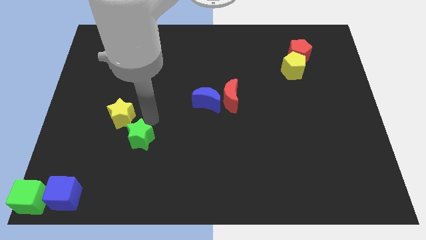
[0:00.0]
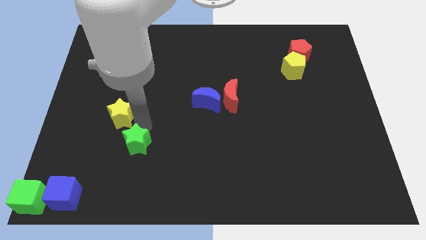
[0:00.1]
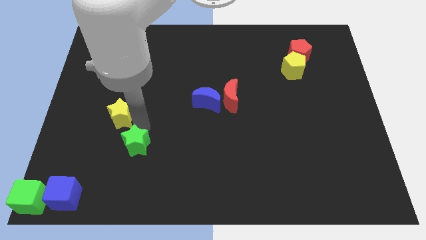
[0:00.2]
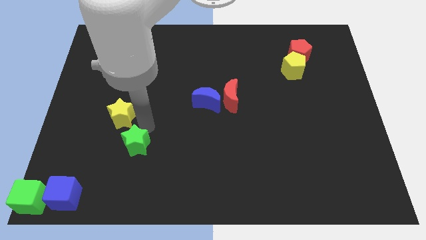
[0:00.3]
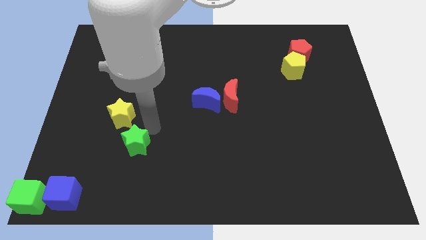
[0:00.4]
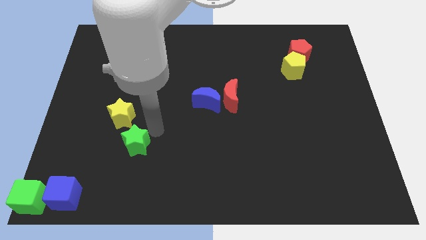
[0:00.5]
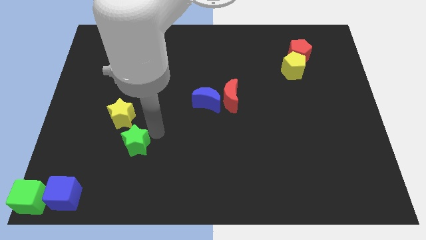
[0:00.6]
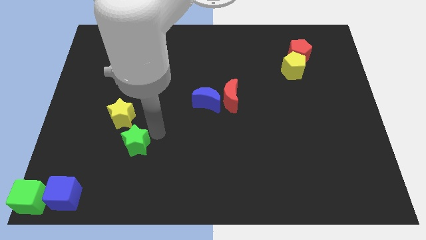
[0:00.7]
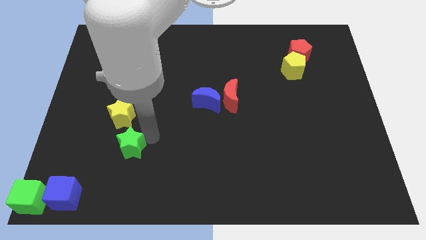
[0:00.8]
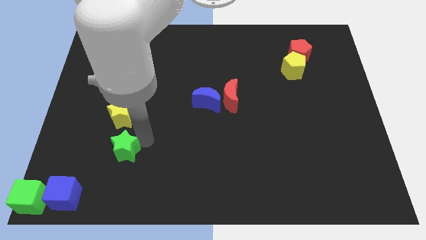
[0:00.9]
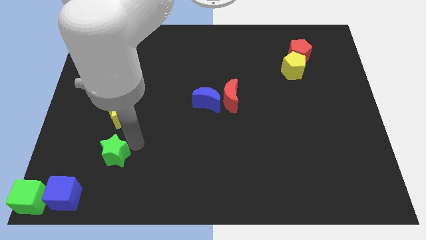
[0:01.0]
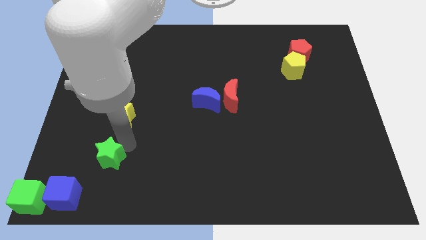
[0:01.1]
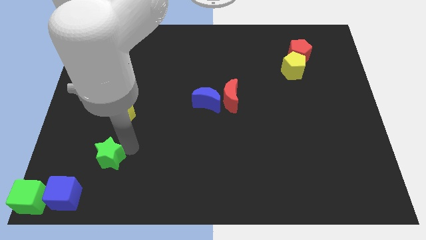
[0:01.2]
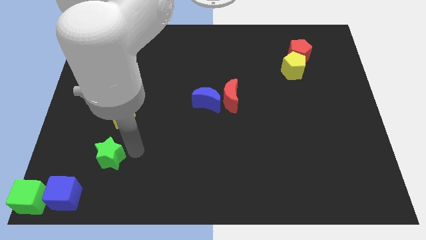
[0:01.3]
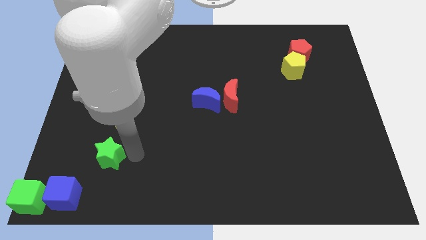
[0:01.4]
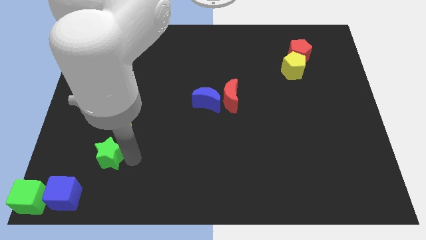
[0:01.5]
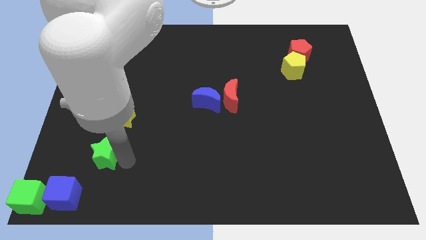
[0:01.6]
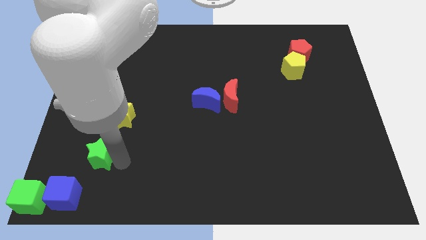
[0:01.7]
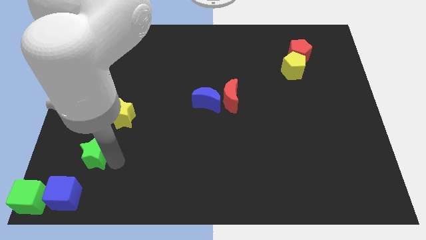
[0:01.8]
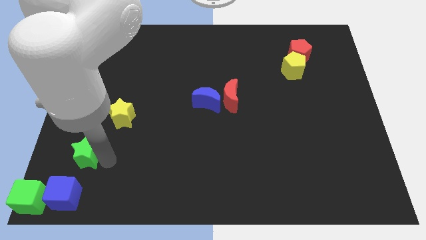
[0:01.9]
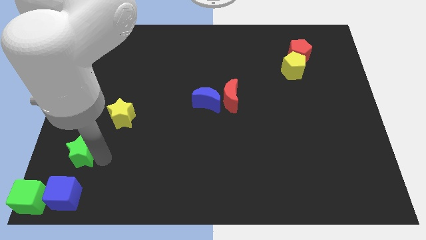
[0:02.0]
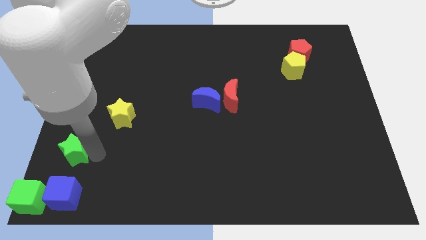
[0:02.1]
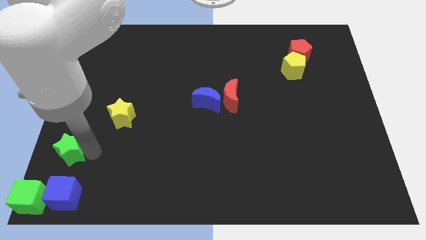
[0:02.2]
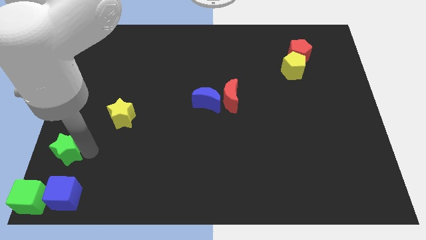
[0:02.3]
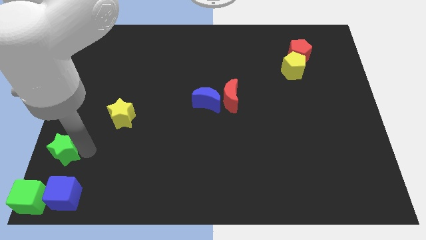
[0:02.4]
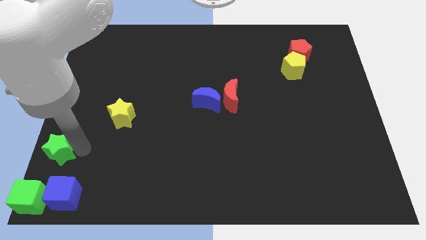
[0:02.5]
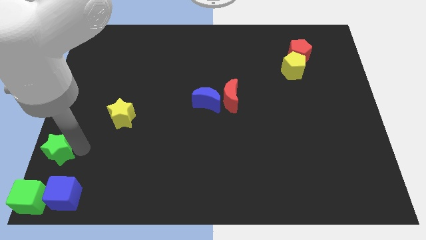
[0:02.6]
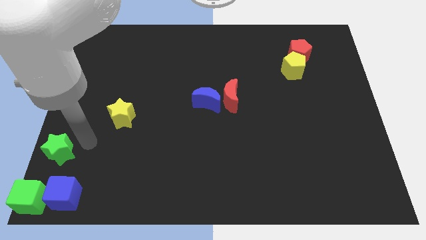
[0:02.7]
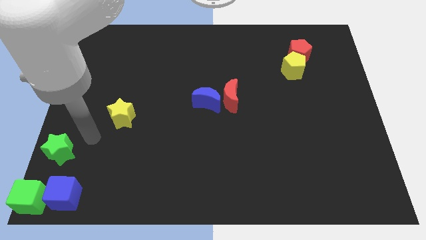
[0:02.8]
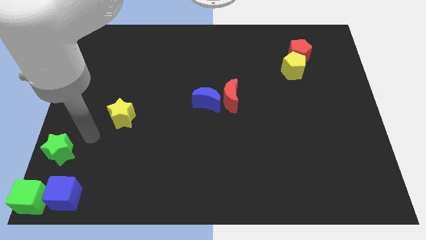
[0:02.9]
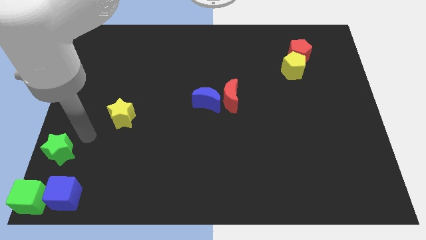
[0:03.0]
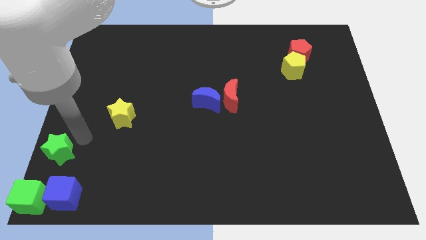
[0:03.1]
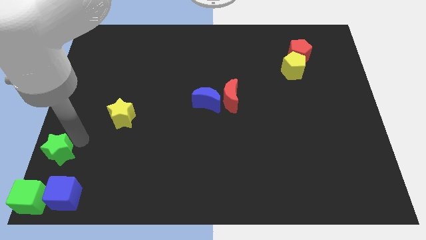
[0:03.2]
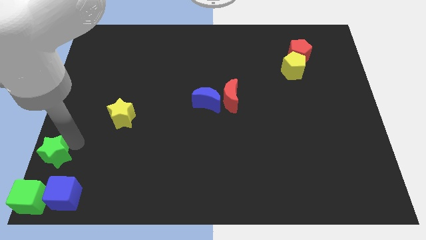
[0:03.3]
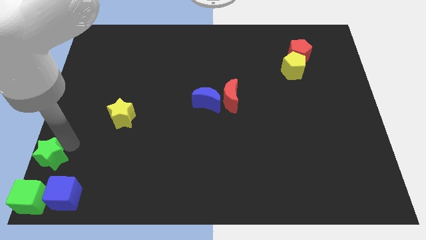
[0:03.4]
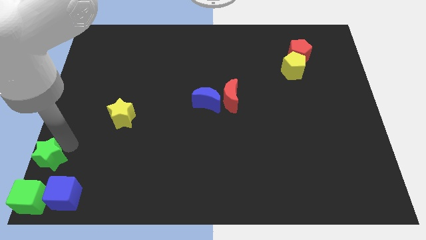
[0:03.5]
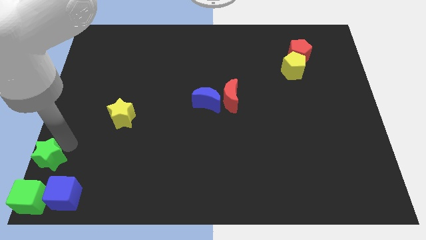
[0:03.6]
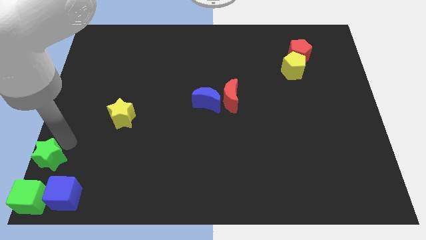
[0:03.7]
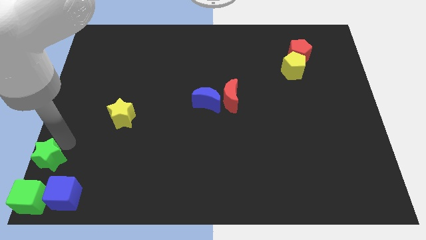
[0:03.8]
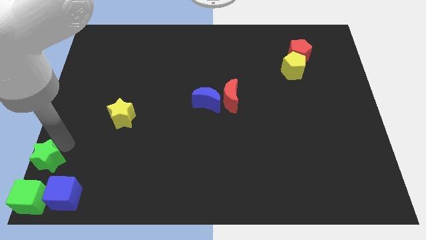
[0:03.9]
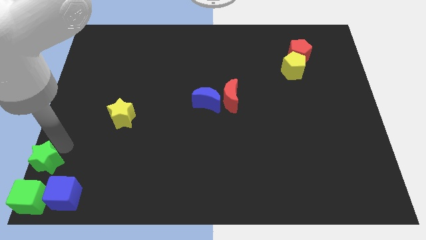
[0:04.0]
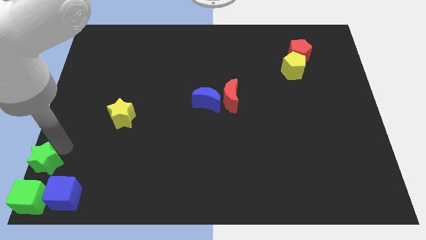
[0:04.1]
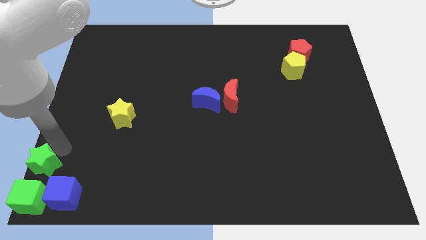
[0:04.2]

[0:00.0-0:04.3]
place green star above green cube

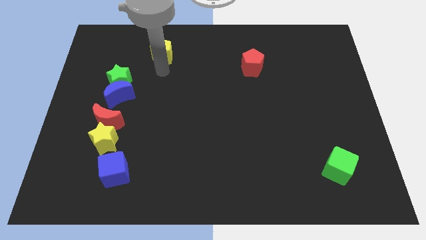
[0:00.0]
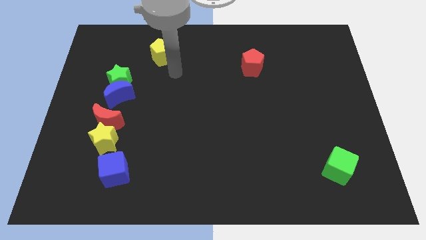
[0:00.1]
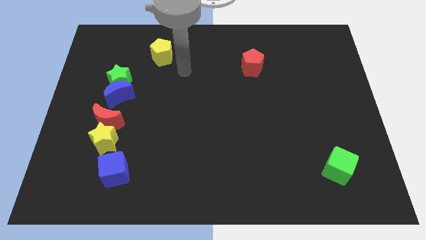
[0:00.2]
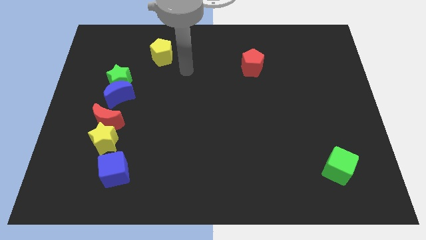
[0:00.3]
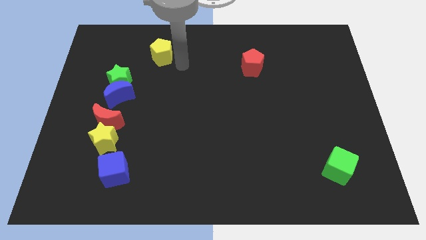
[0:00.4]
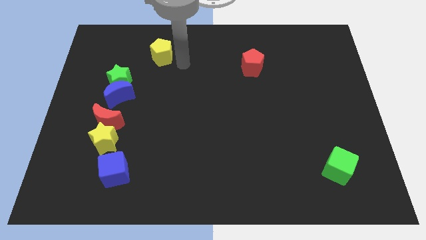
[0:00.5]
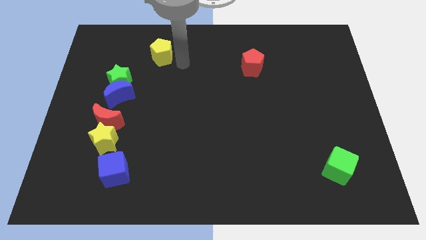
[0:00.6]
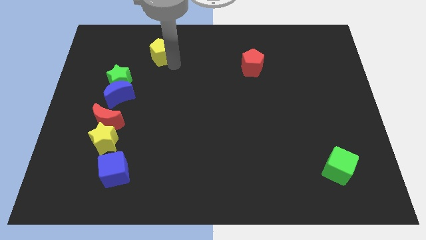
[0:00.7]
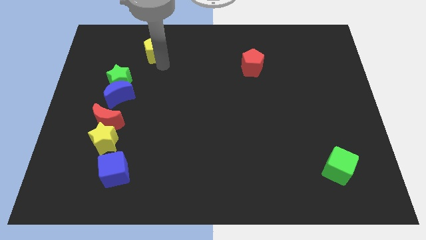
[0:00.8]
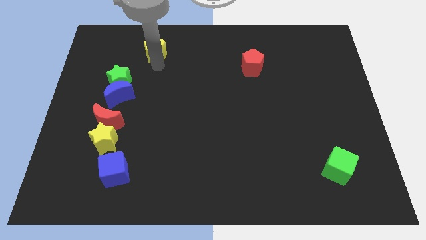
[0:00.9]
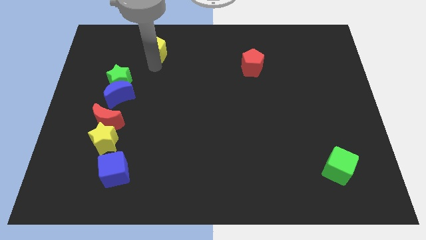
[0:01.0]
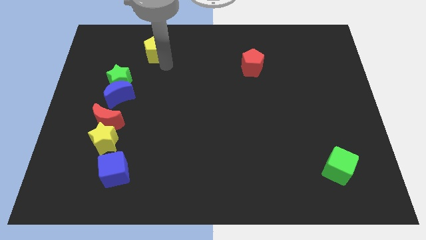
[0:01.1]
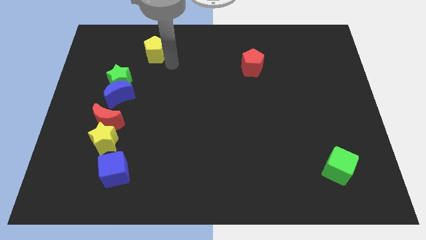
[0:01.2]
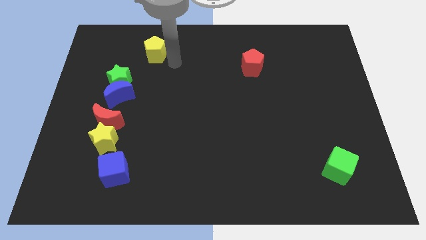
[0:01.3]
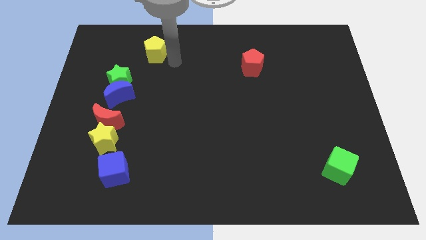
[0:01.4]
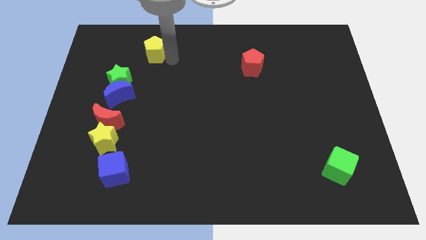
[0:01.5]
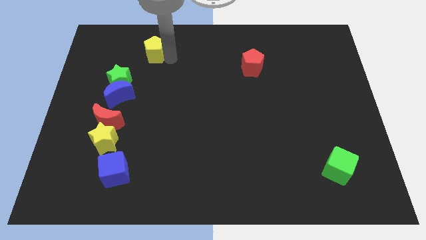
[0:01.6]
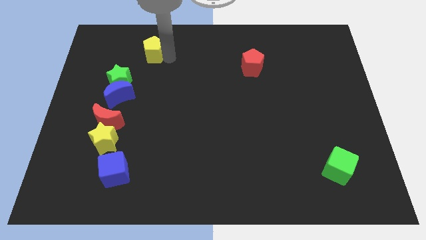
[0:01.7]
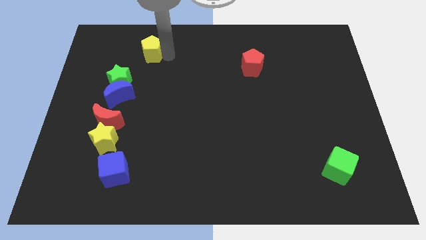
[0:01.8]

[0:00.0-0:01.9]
drag the yellow pentagon diagonally on the top right side of the green star

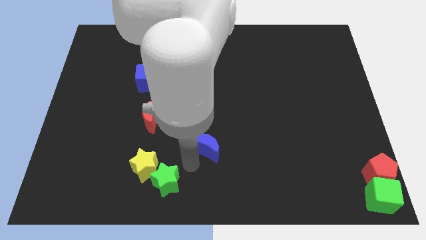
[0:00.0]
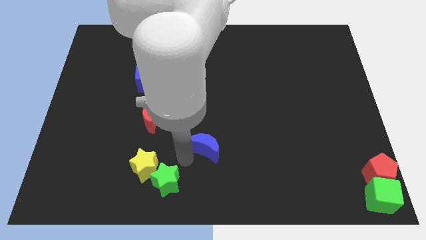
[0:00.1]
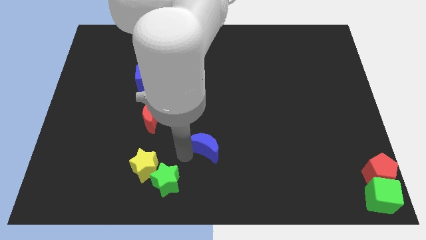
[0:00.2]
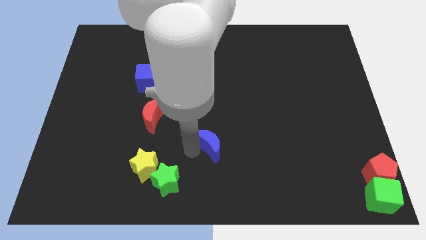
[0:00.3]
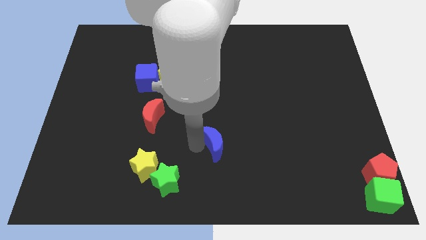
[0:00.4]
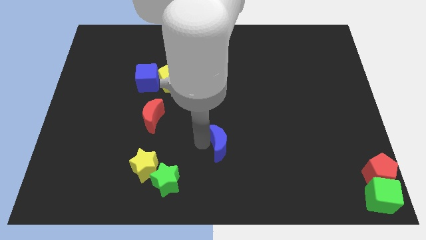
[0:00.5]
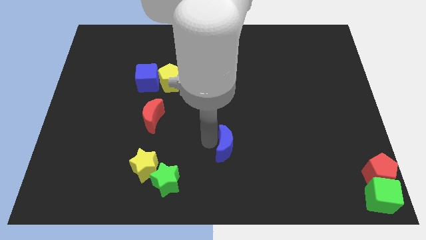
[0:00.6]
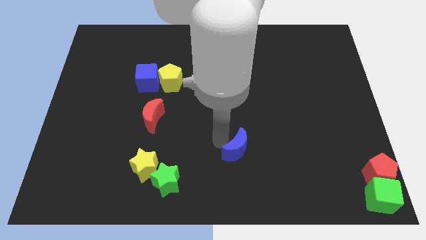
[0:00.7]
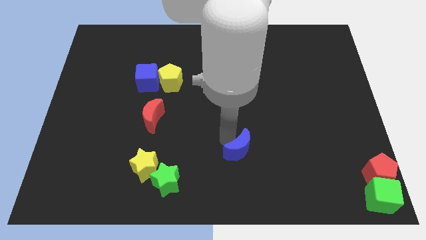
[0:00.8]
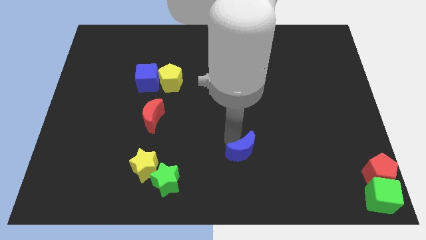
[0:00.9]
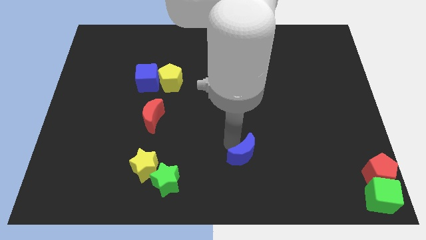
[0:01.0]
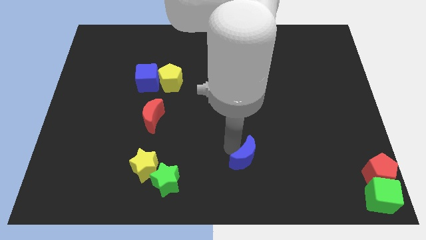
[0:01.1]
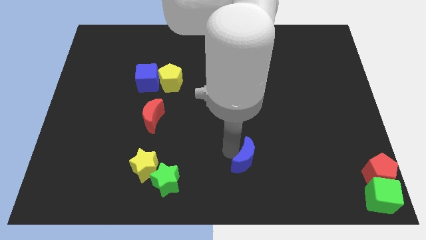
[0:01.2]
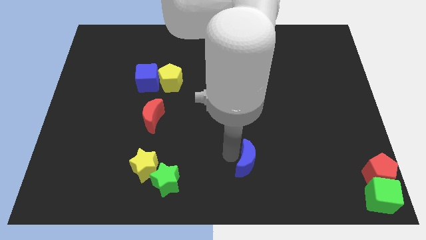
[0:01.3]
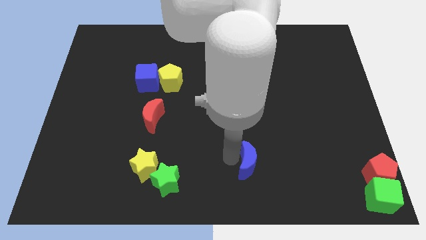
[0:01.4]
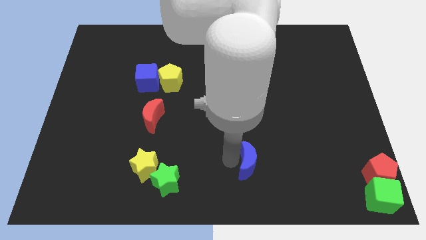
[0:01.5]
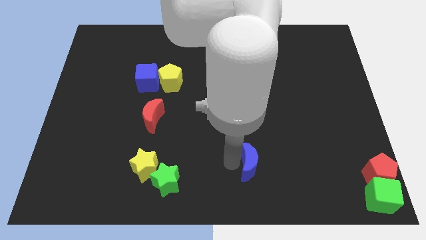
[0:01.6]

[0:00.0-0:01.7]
slide the blue moon in between the red pentagon and the yellow star

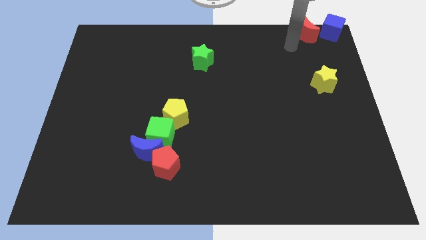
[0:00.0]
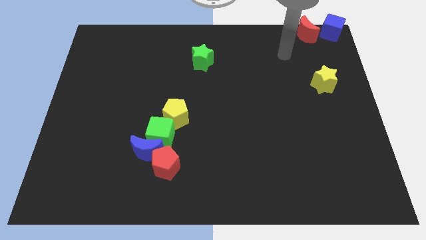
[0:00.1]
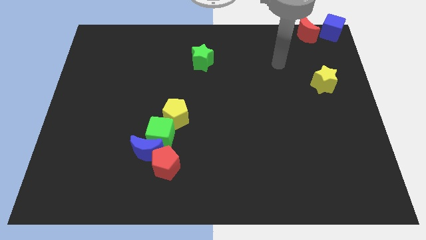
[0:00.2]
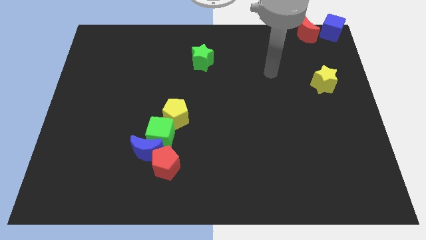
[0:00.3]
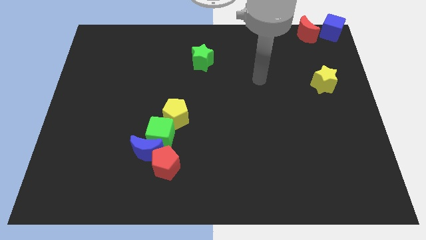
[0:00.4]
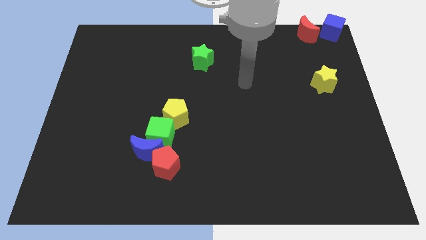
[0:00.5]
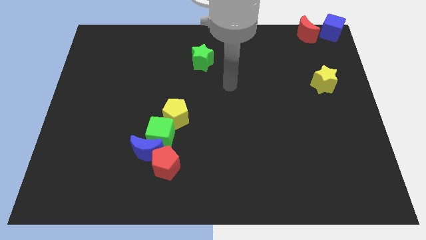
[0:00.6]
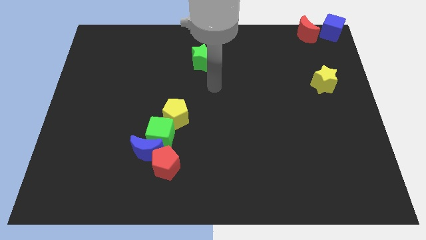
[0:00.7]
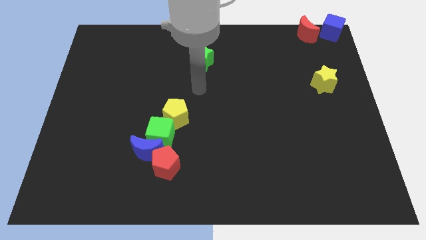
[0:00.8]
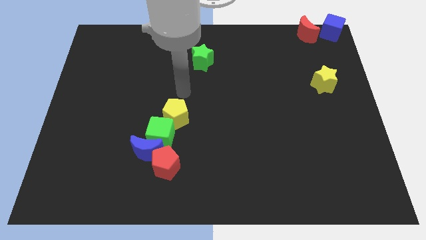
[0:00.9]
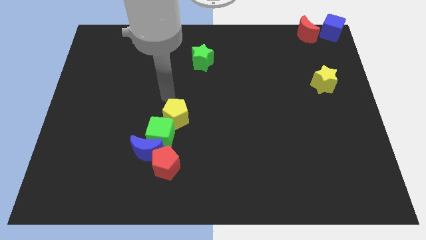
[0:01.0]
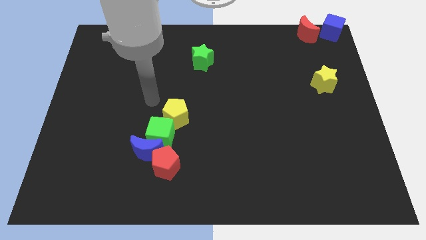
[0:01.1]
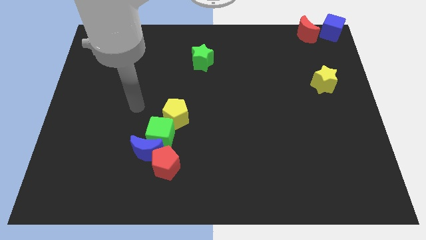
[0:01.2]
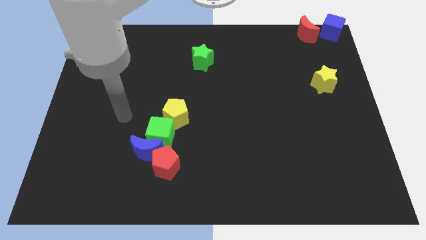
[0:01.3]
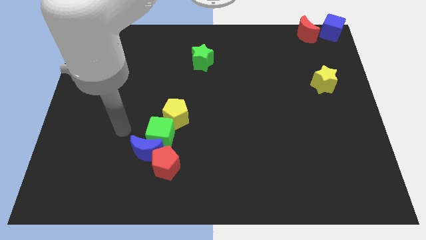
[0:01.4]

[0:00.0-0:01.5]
move your arm left to the green cube
